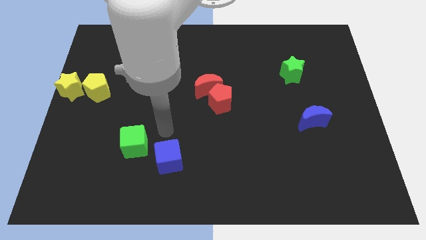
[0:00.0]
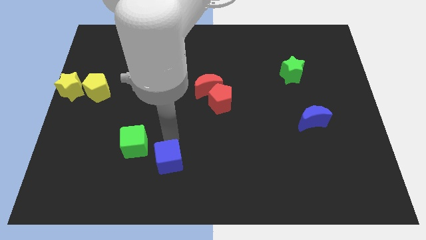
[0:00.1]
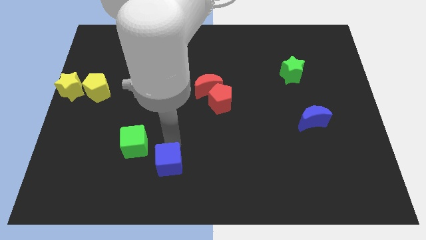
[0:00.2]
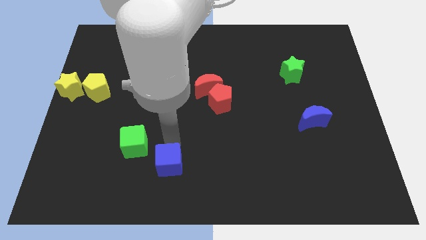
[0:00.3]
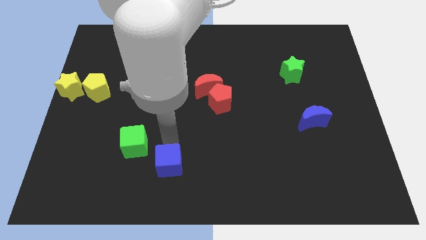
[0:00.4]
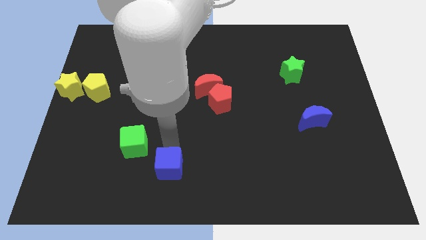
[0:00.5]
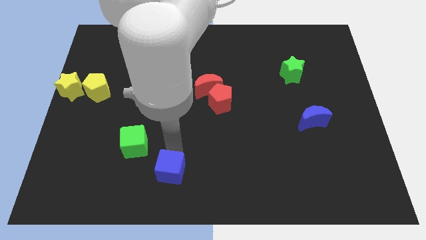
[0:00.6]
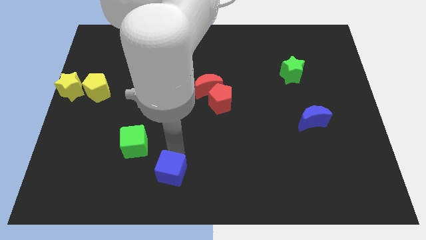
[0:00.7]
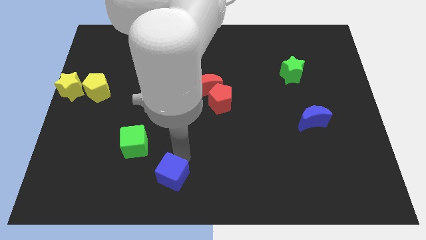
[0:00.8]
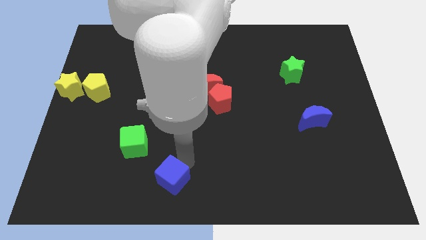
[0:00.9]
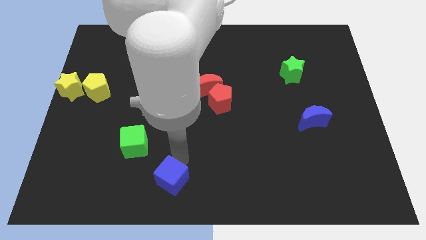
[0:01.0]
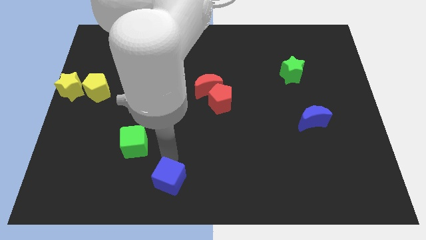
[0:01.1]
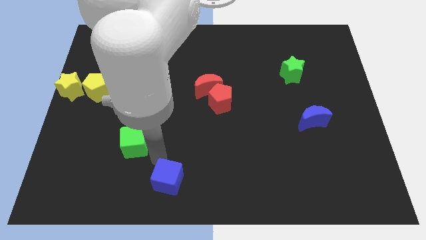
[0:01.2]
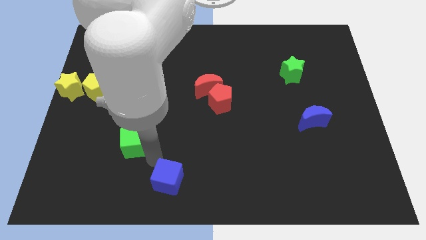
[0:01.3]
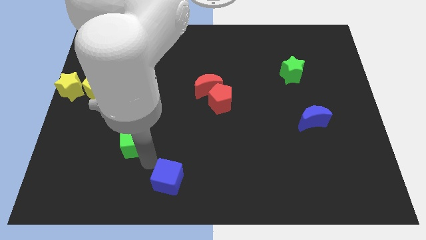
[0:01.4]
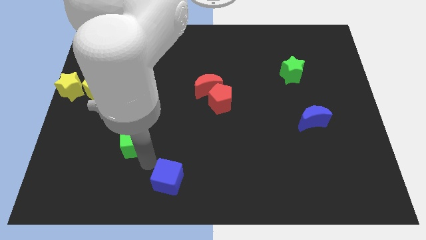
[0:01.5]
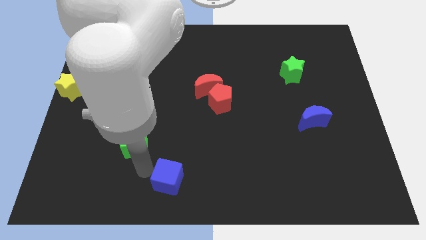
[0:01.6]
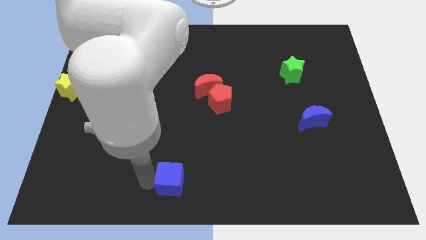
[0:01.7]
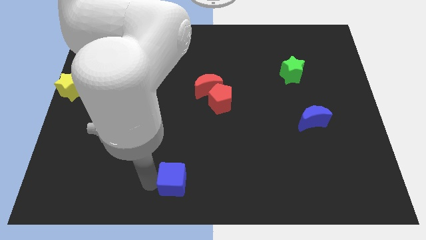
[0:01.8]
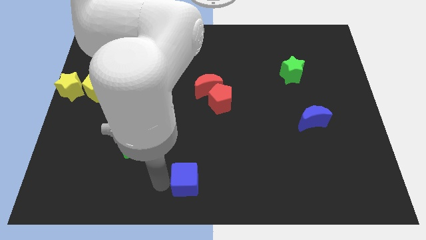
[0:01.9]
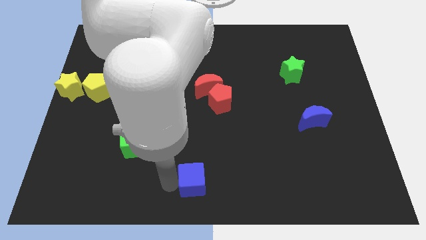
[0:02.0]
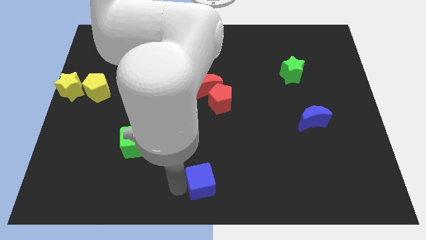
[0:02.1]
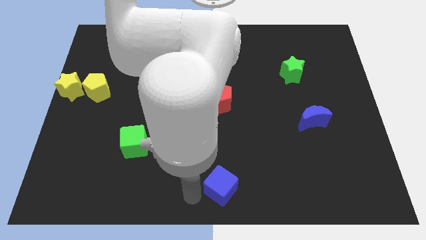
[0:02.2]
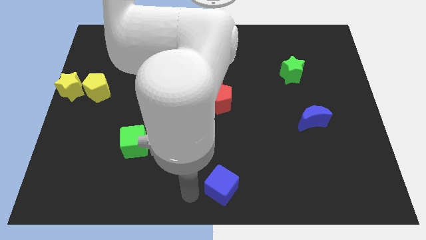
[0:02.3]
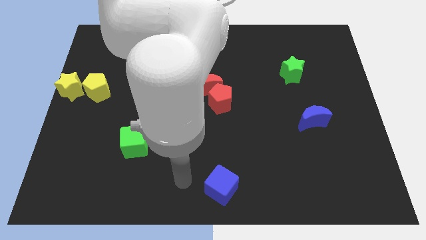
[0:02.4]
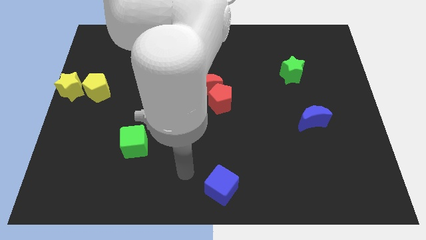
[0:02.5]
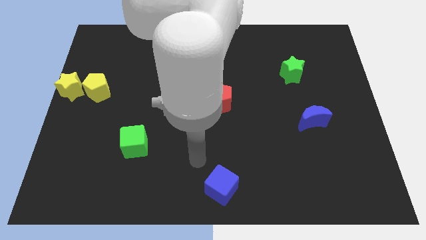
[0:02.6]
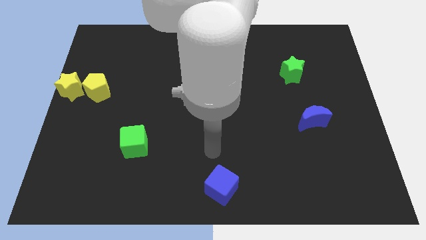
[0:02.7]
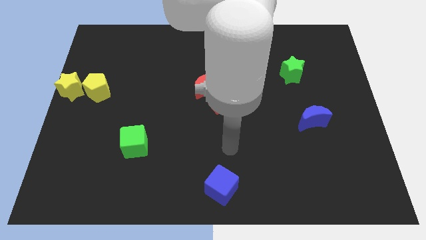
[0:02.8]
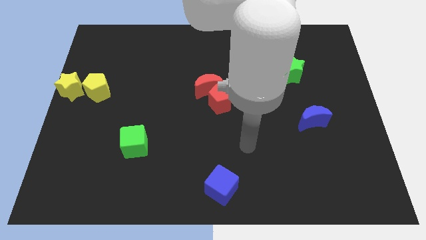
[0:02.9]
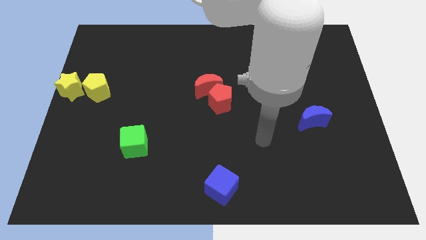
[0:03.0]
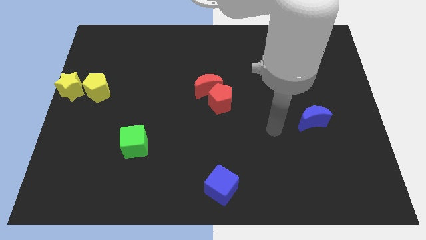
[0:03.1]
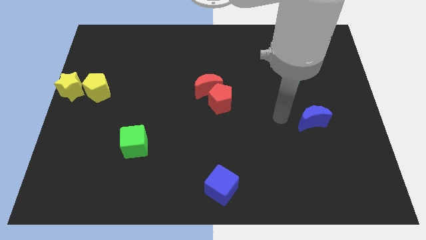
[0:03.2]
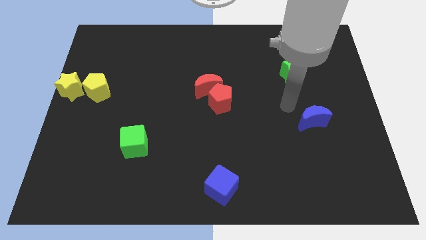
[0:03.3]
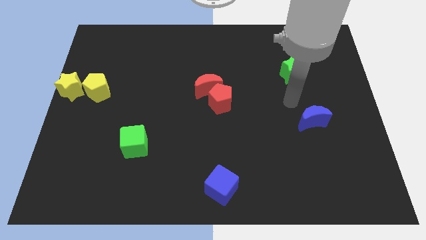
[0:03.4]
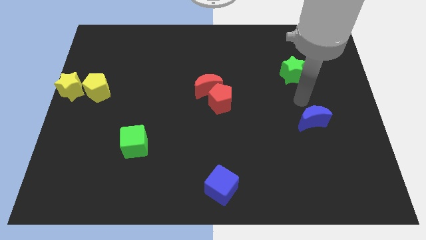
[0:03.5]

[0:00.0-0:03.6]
move the blue cube to the bottom center

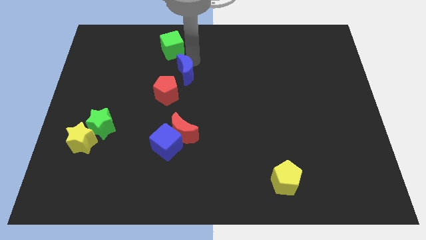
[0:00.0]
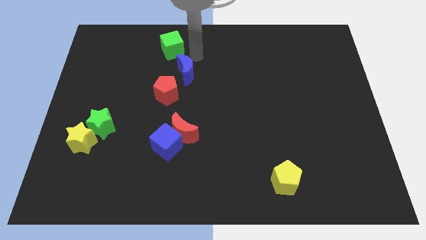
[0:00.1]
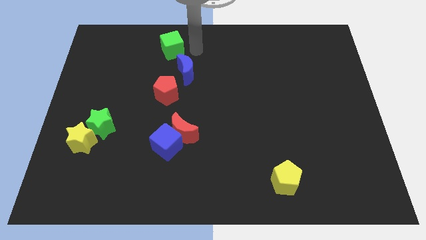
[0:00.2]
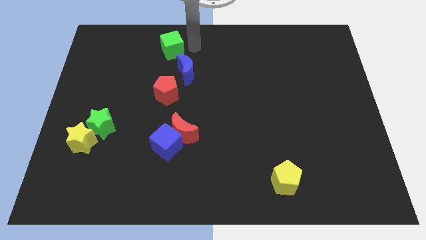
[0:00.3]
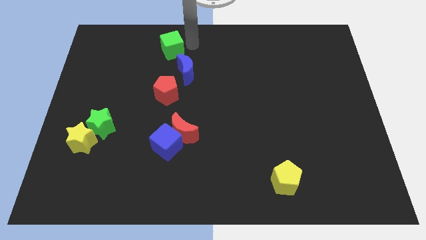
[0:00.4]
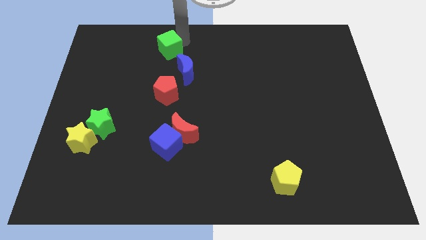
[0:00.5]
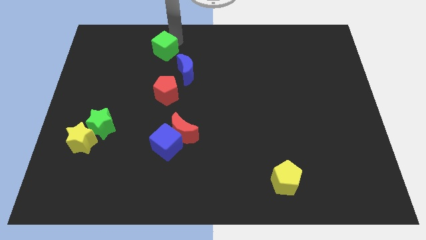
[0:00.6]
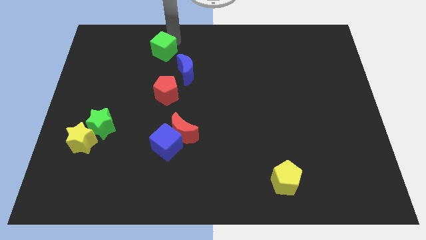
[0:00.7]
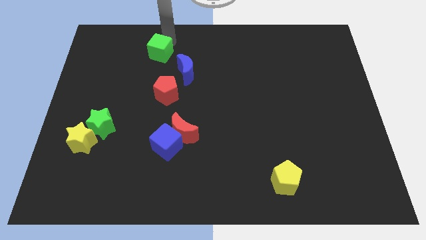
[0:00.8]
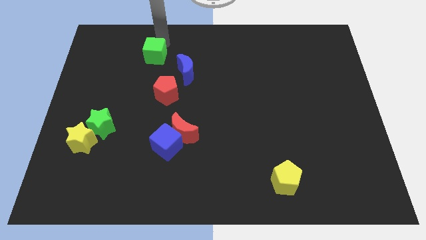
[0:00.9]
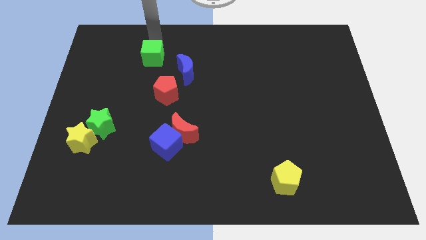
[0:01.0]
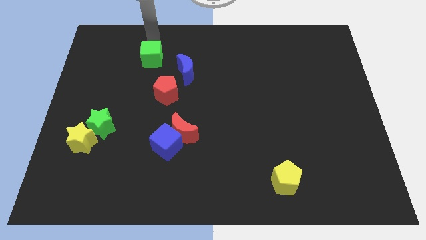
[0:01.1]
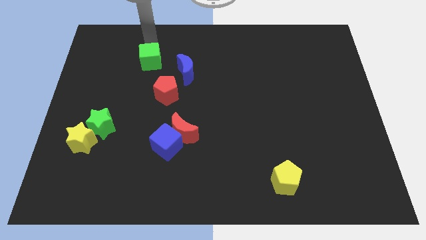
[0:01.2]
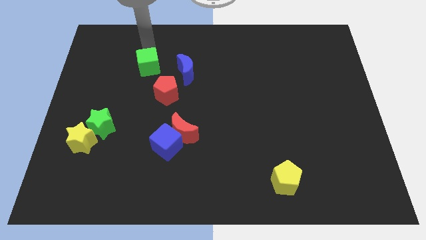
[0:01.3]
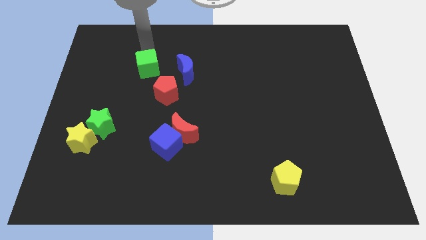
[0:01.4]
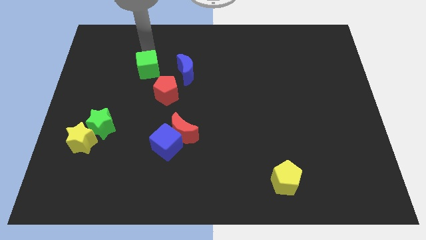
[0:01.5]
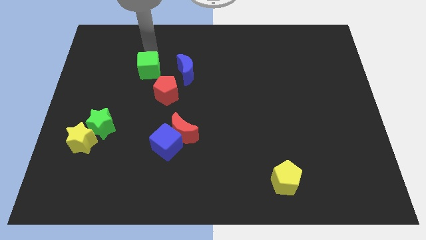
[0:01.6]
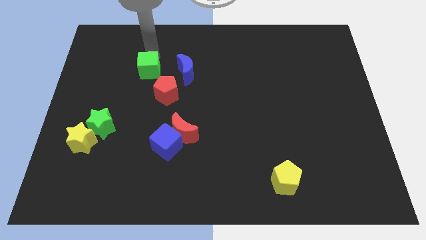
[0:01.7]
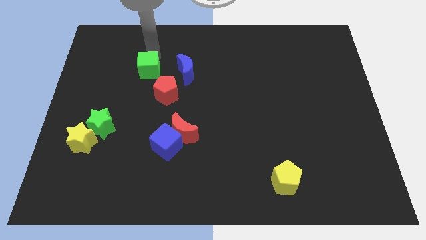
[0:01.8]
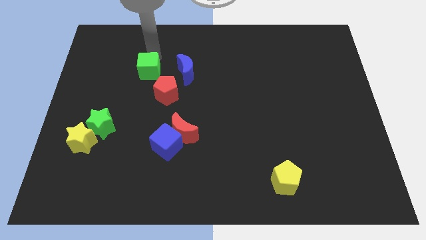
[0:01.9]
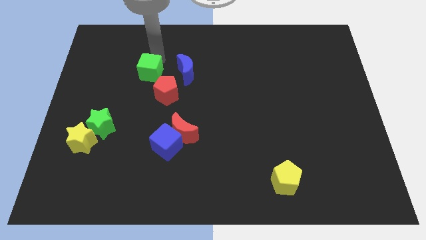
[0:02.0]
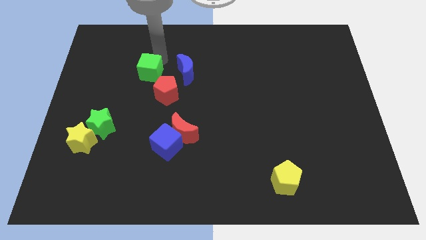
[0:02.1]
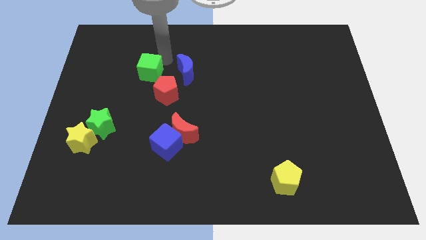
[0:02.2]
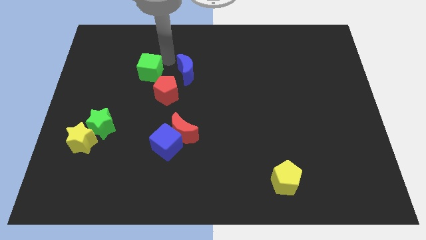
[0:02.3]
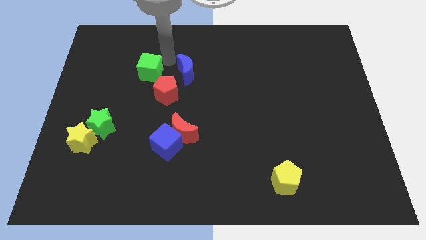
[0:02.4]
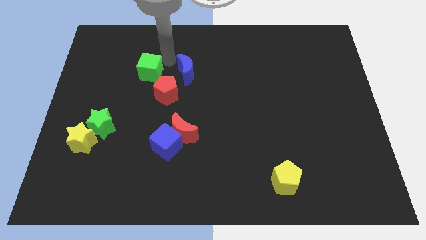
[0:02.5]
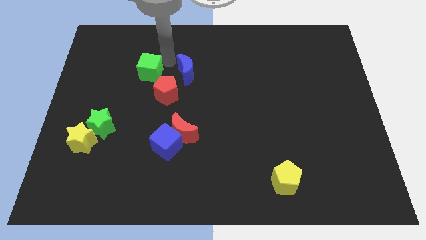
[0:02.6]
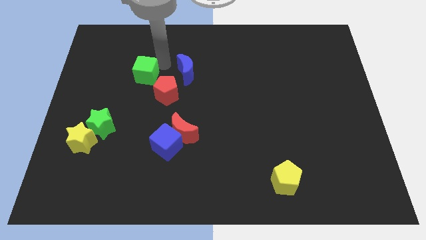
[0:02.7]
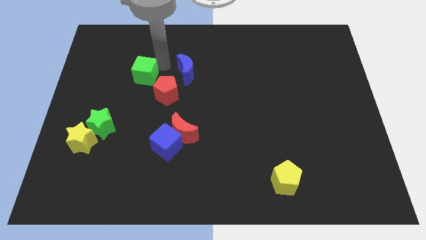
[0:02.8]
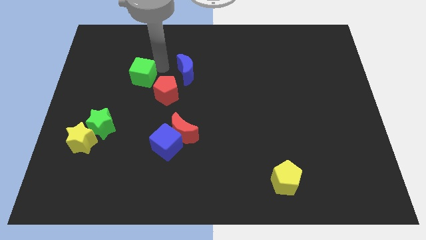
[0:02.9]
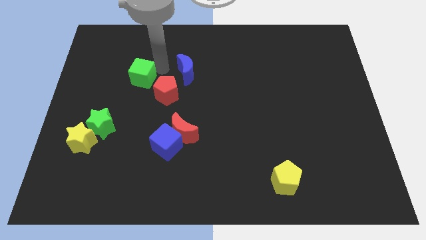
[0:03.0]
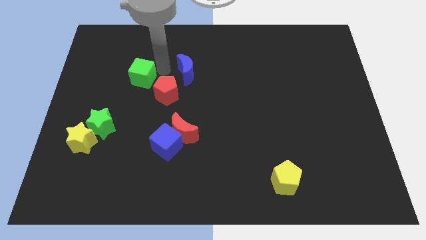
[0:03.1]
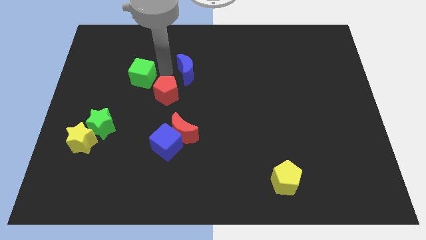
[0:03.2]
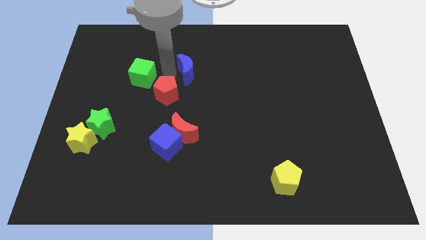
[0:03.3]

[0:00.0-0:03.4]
separate the green cube from the blue crescent

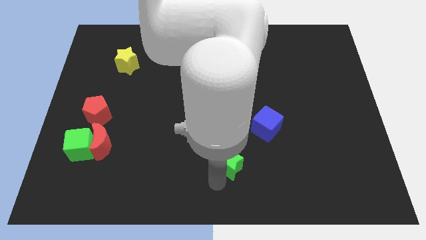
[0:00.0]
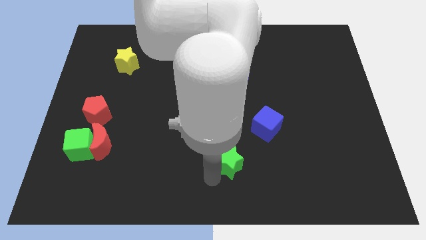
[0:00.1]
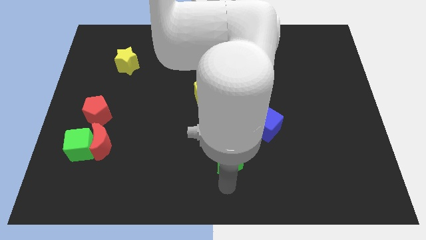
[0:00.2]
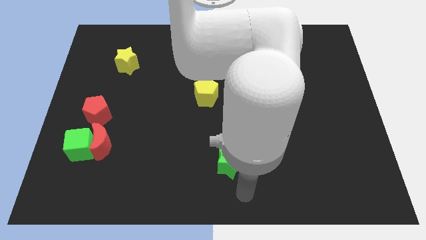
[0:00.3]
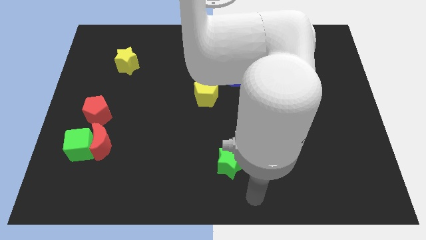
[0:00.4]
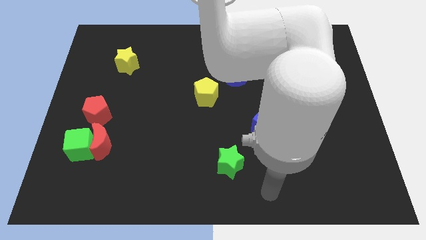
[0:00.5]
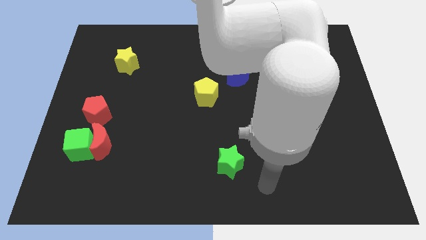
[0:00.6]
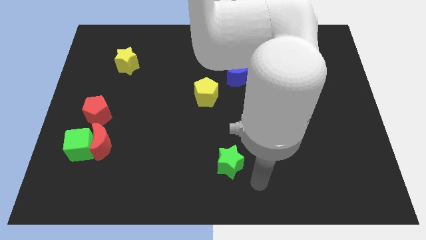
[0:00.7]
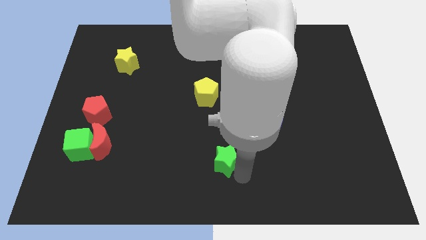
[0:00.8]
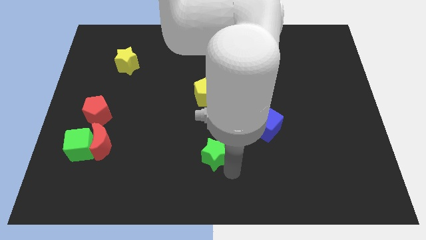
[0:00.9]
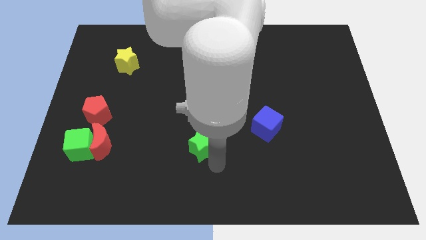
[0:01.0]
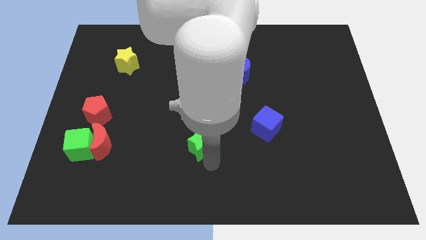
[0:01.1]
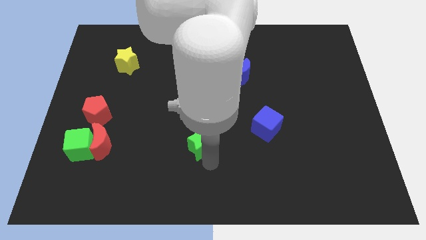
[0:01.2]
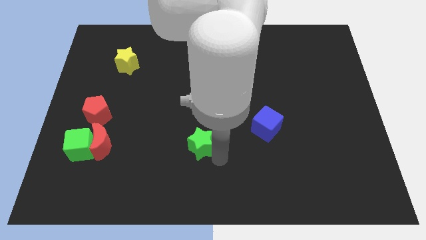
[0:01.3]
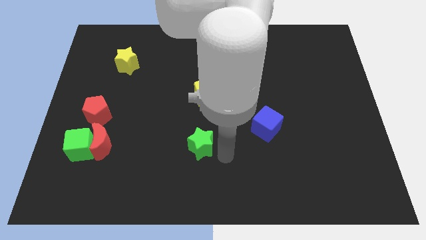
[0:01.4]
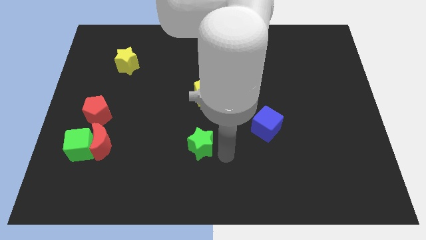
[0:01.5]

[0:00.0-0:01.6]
place green star to the bottom of yellow pentagon

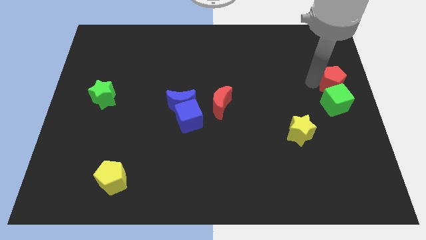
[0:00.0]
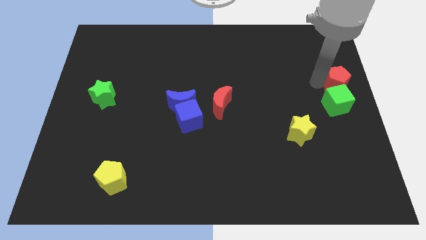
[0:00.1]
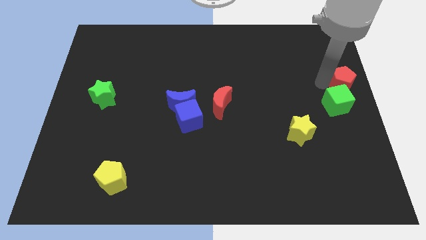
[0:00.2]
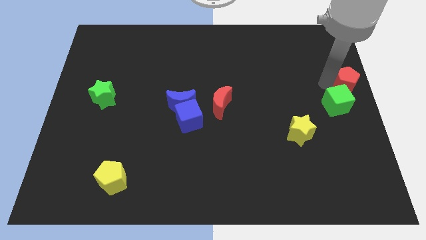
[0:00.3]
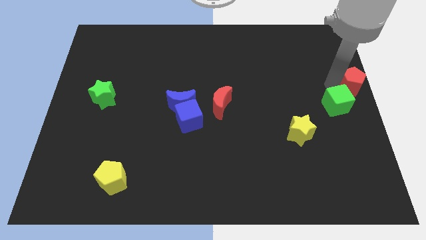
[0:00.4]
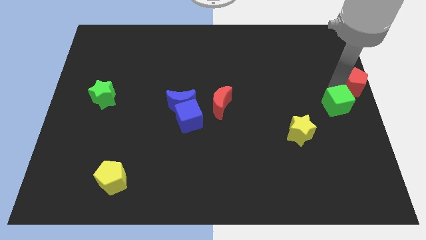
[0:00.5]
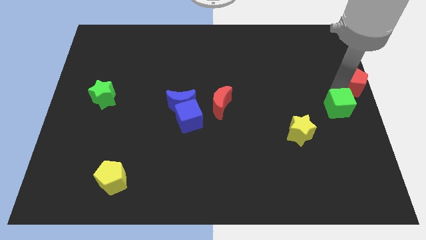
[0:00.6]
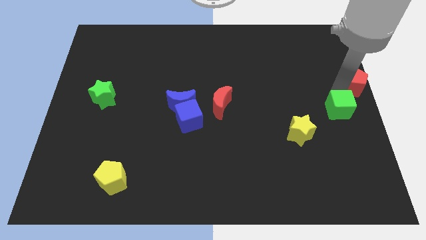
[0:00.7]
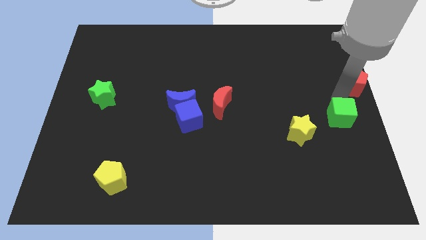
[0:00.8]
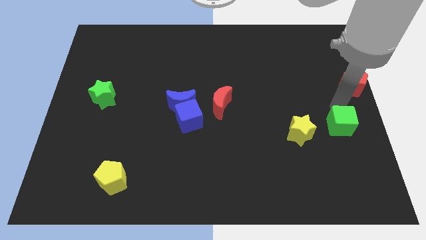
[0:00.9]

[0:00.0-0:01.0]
place the red pentagon away from the green cube
